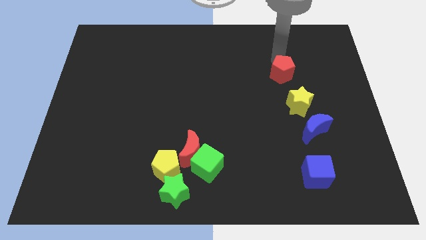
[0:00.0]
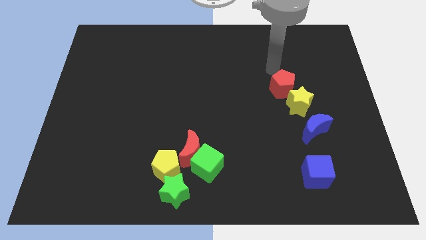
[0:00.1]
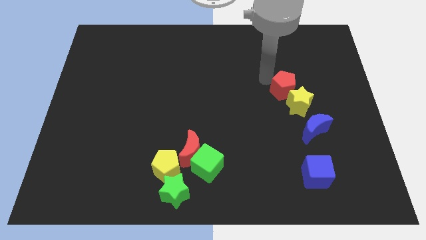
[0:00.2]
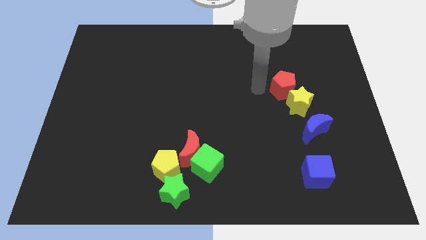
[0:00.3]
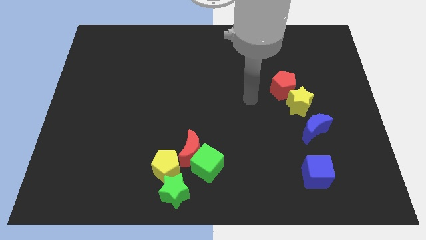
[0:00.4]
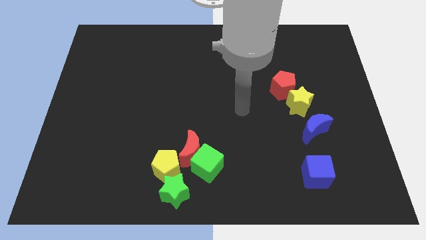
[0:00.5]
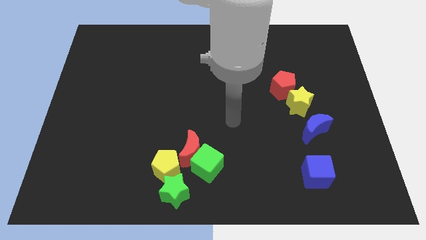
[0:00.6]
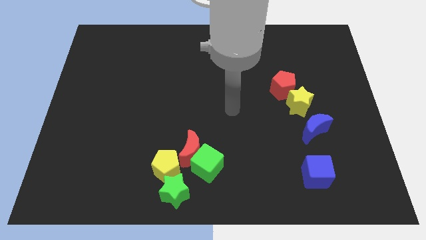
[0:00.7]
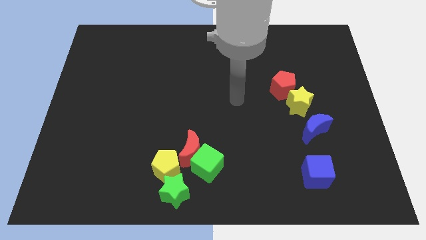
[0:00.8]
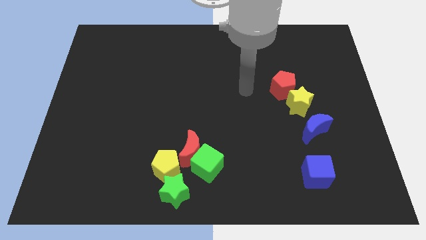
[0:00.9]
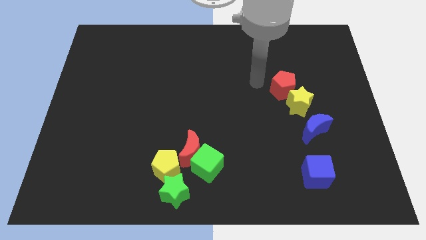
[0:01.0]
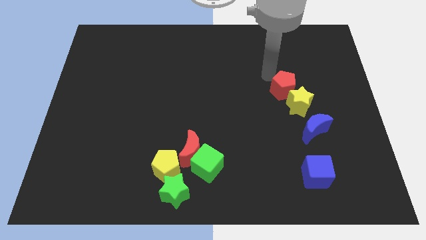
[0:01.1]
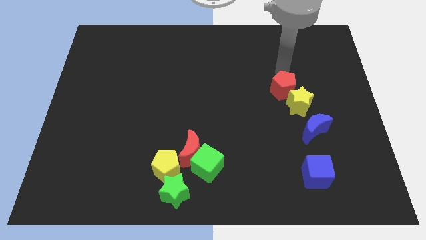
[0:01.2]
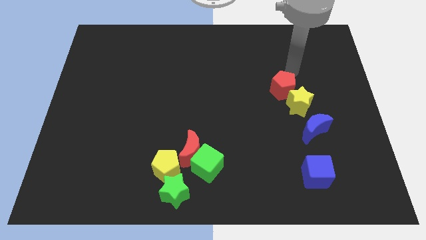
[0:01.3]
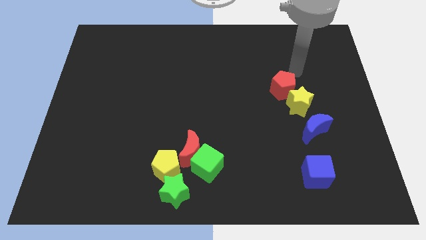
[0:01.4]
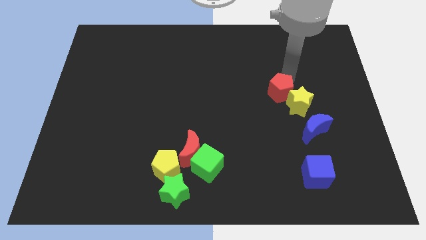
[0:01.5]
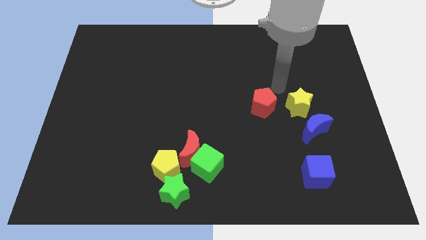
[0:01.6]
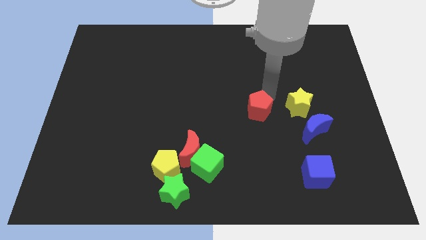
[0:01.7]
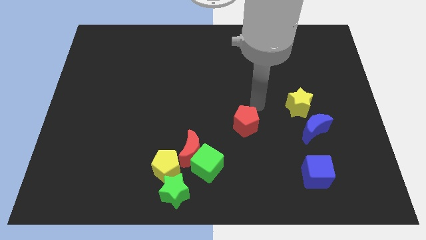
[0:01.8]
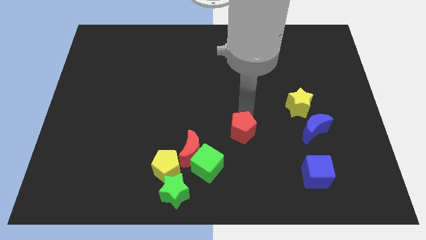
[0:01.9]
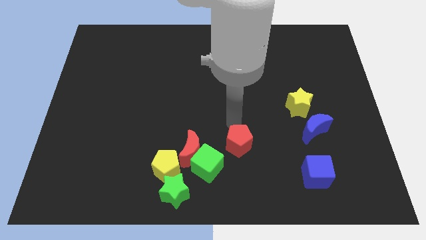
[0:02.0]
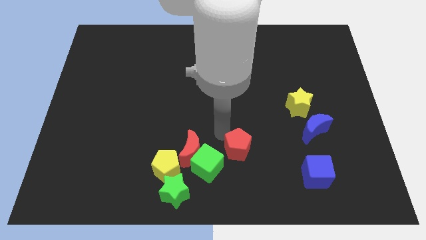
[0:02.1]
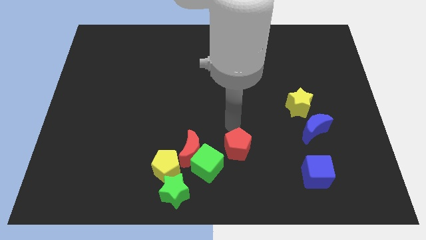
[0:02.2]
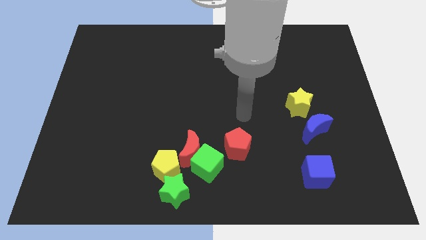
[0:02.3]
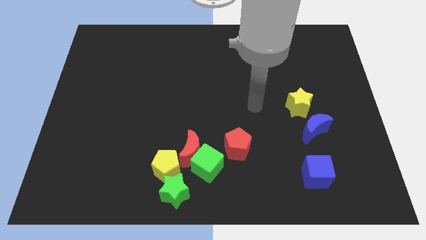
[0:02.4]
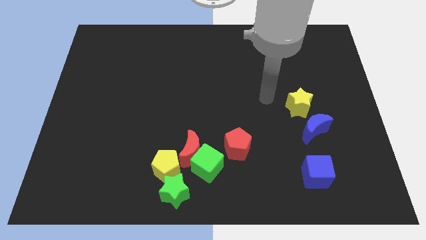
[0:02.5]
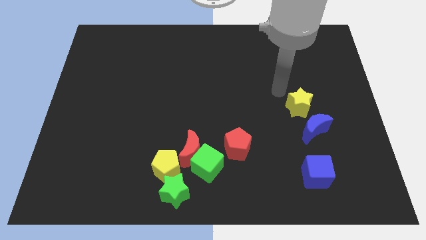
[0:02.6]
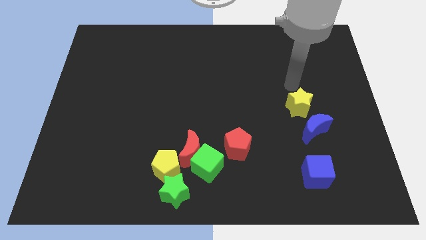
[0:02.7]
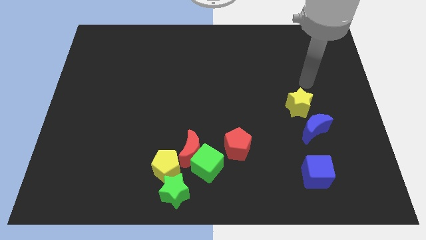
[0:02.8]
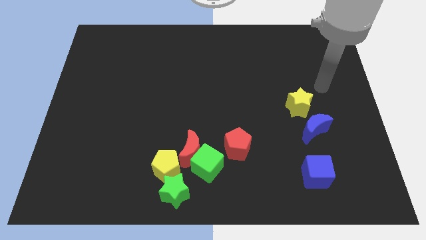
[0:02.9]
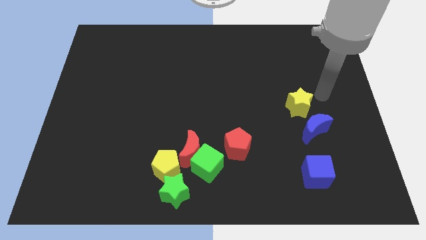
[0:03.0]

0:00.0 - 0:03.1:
move the red pentagon diagonally right to the green cube

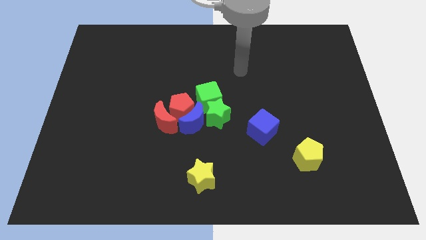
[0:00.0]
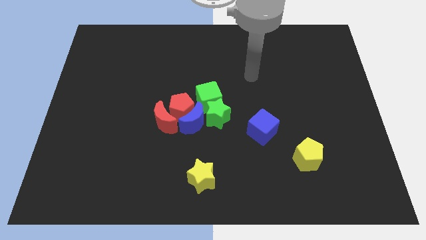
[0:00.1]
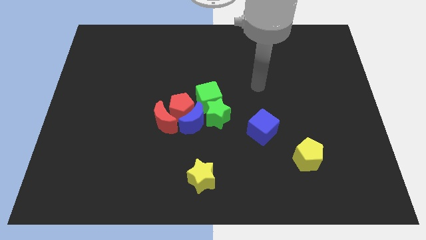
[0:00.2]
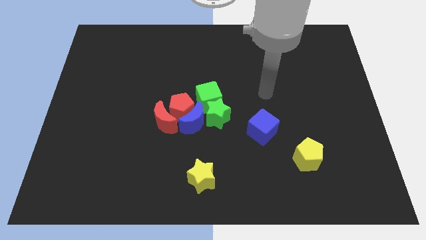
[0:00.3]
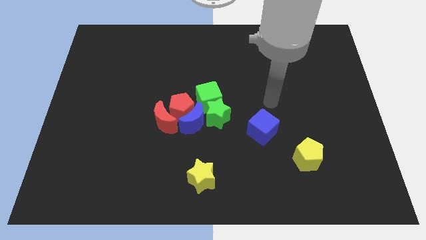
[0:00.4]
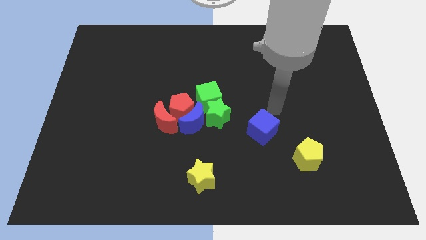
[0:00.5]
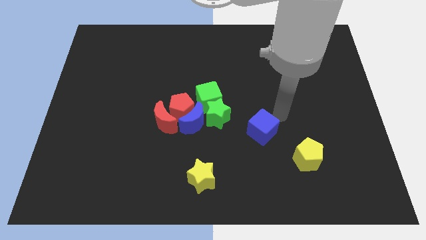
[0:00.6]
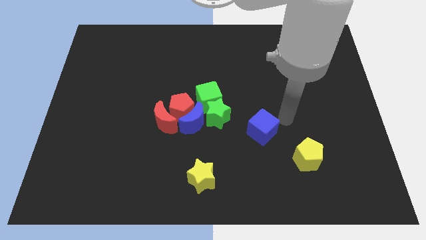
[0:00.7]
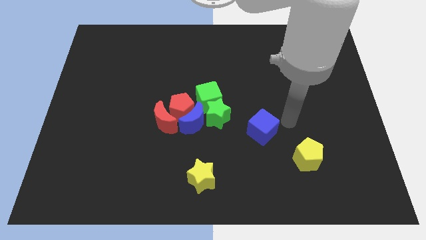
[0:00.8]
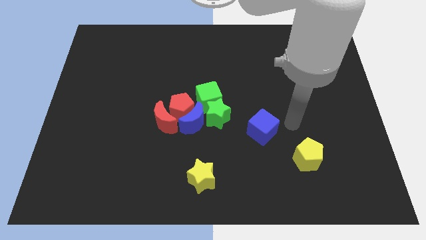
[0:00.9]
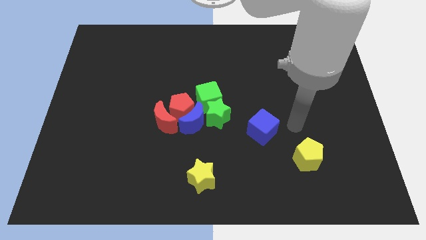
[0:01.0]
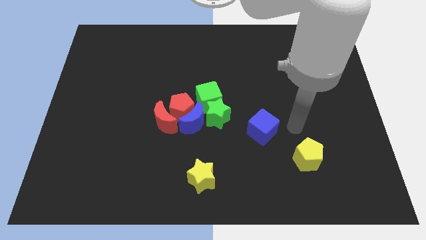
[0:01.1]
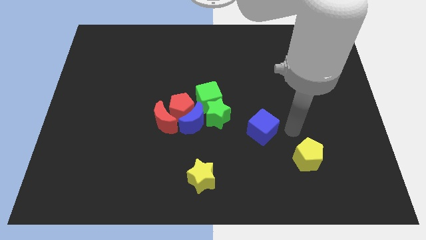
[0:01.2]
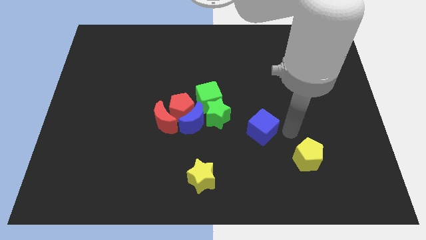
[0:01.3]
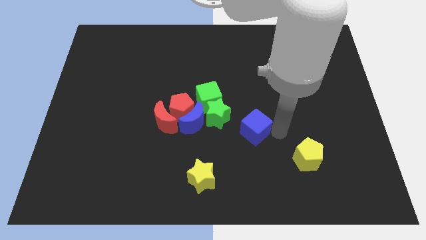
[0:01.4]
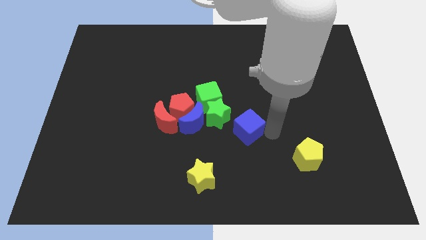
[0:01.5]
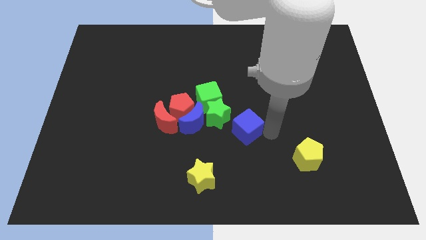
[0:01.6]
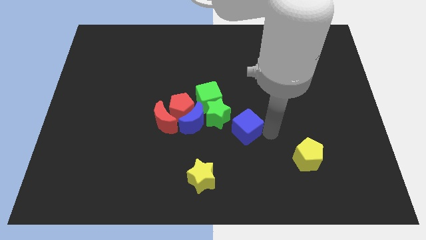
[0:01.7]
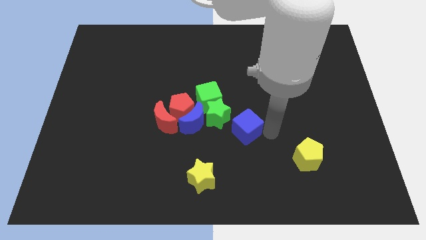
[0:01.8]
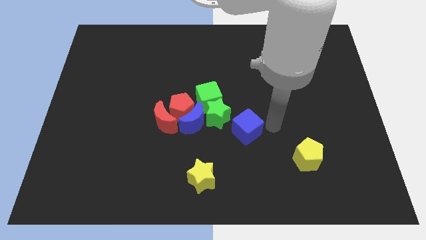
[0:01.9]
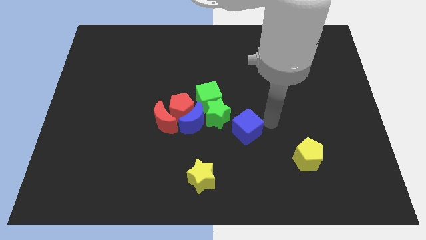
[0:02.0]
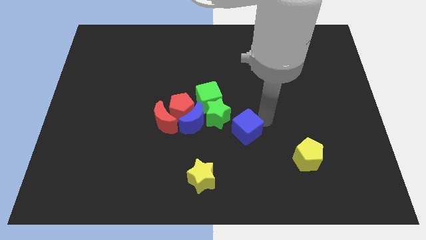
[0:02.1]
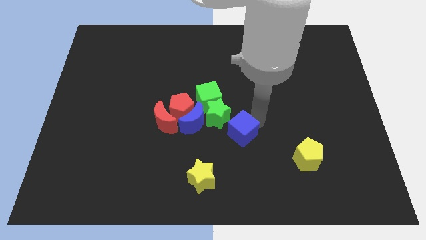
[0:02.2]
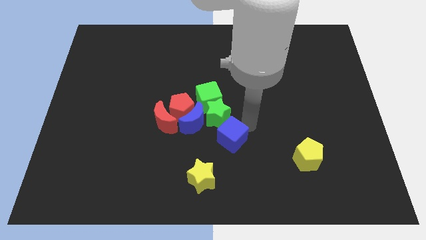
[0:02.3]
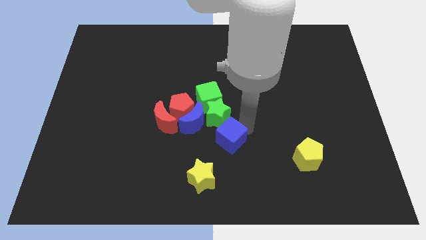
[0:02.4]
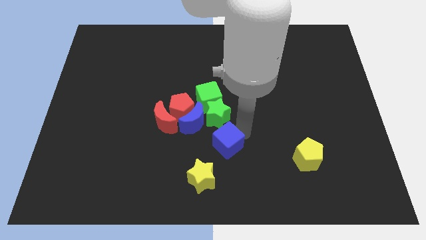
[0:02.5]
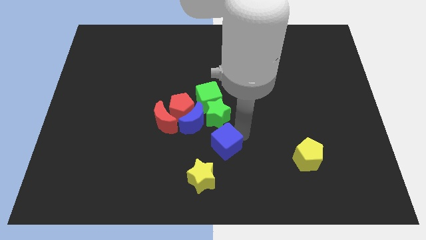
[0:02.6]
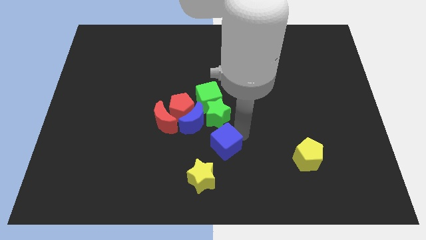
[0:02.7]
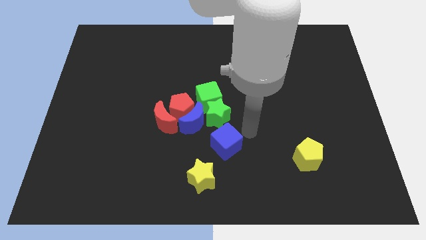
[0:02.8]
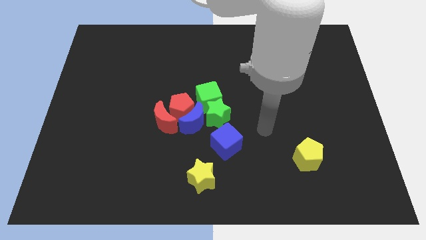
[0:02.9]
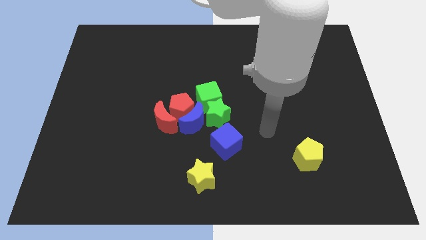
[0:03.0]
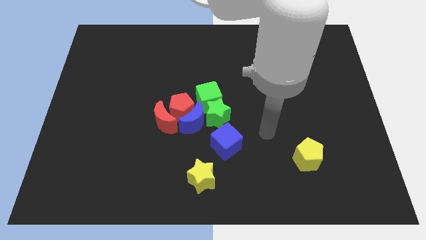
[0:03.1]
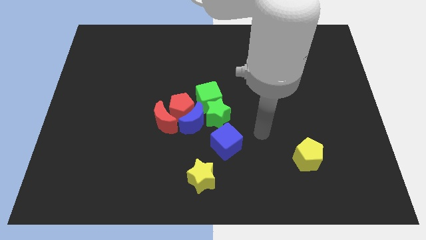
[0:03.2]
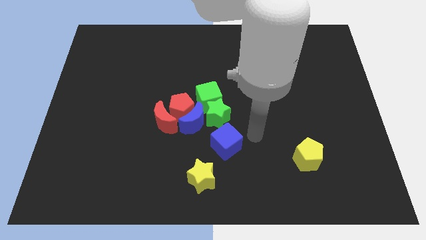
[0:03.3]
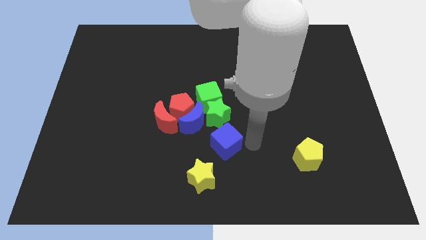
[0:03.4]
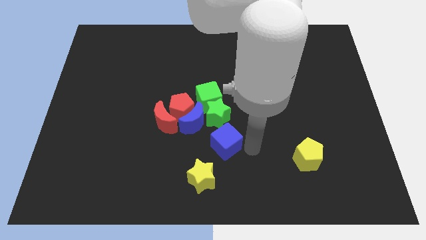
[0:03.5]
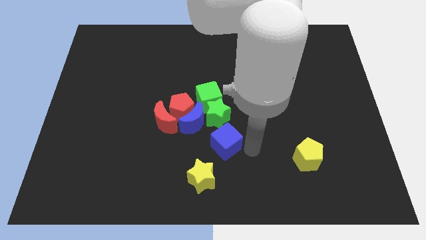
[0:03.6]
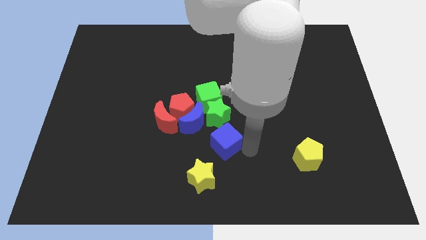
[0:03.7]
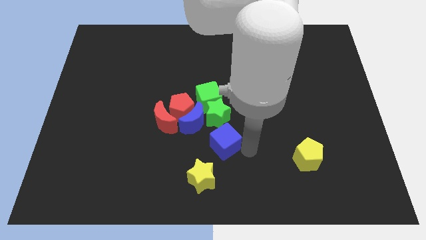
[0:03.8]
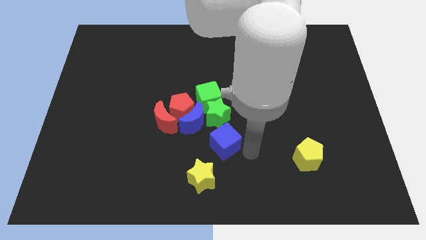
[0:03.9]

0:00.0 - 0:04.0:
place the blue cube to the bottom of the green star

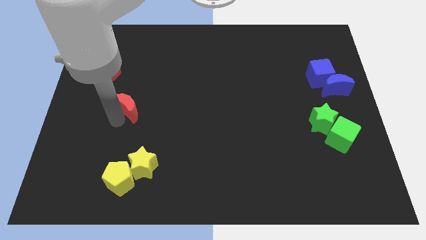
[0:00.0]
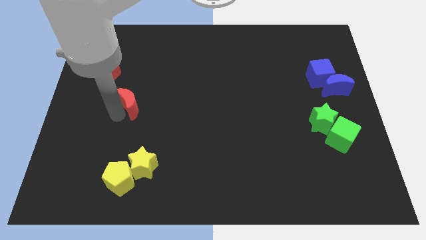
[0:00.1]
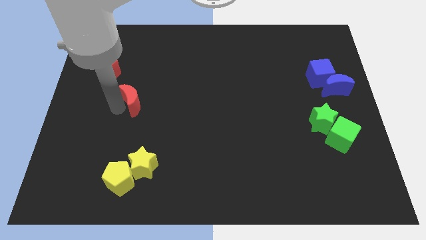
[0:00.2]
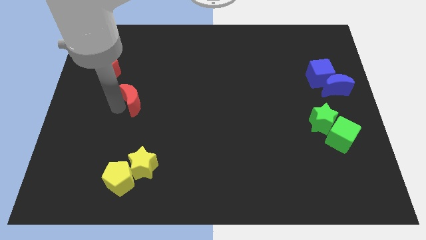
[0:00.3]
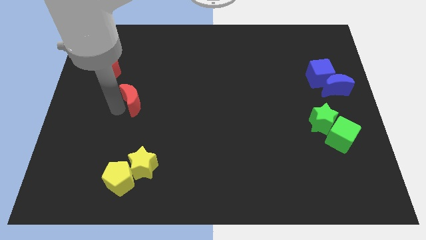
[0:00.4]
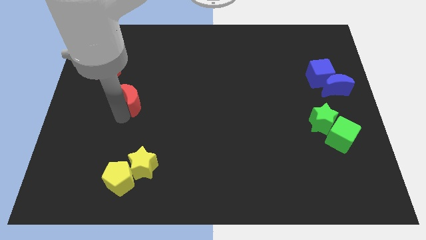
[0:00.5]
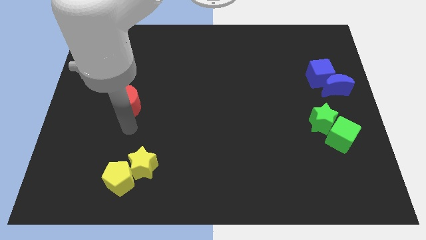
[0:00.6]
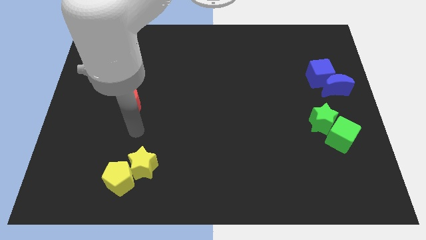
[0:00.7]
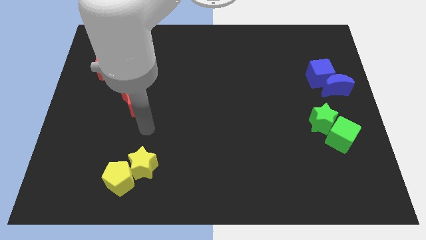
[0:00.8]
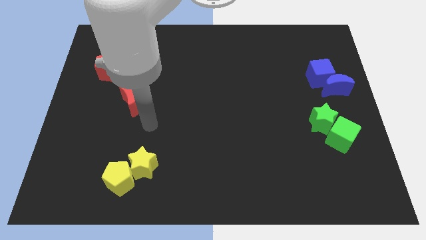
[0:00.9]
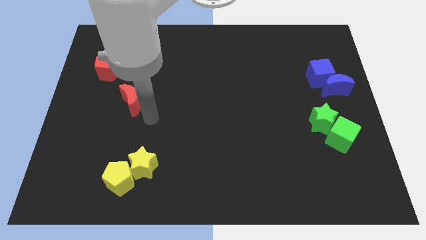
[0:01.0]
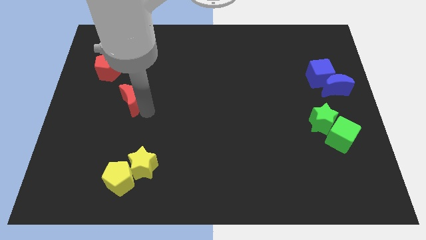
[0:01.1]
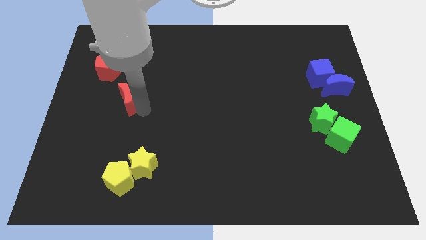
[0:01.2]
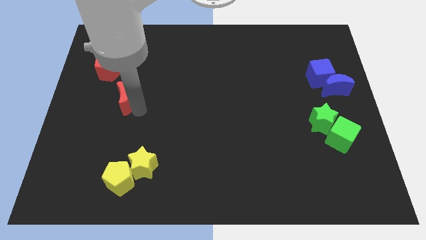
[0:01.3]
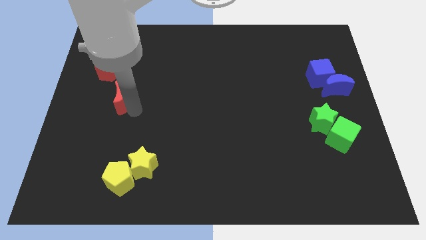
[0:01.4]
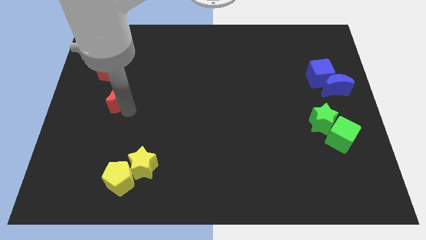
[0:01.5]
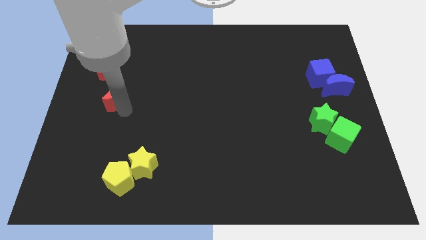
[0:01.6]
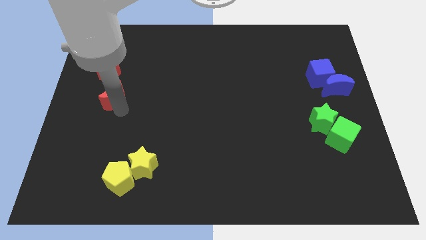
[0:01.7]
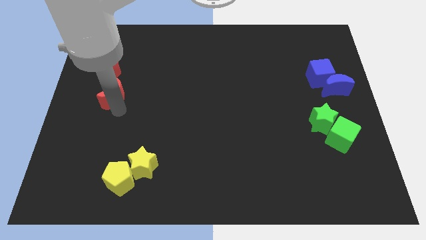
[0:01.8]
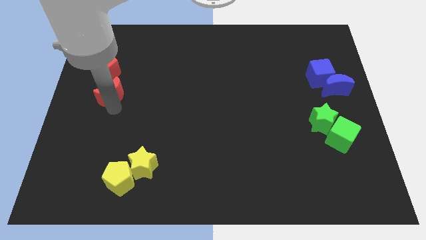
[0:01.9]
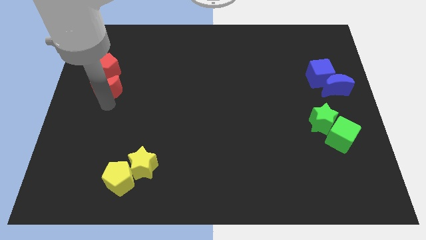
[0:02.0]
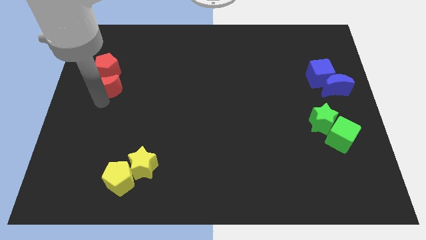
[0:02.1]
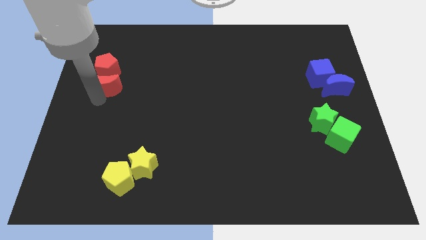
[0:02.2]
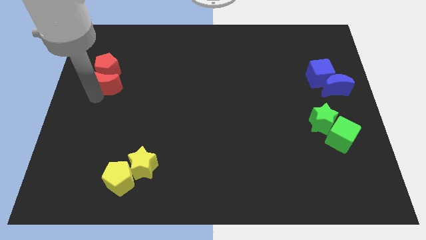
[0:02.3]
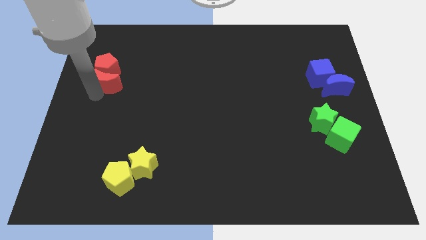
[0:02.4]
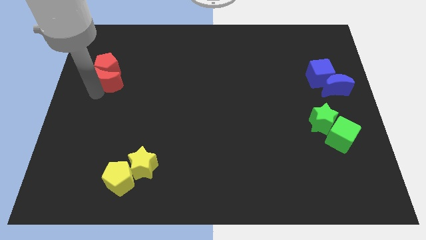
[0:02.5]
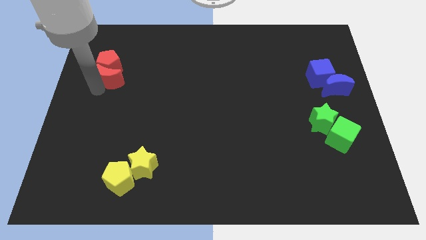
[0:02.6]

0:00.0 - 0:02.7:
move the red moon into the red pentagon
